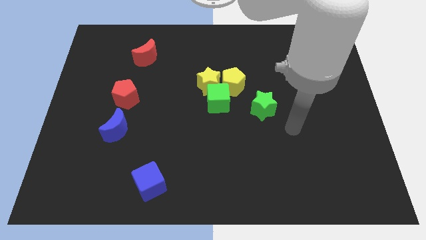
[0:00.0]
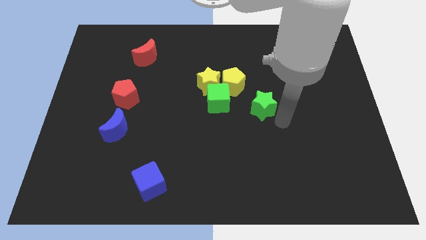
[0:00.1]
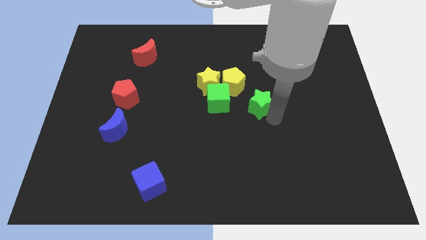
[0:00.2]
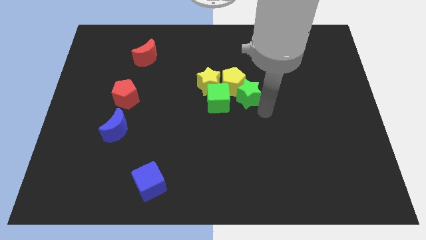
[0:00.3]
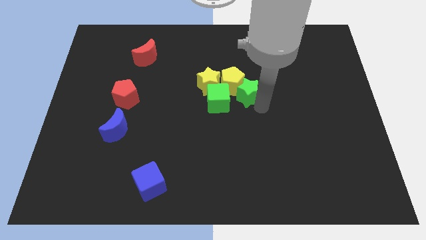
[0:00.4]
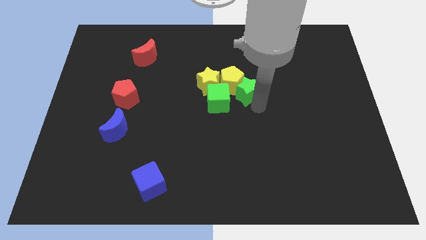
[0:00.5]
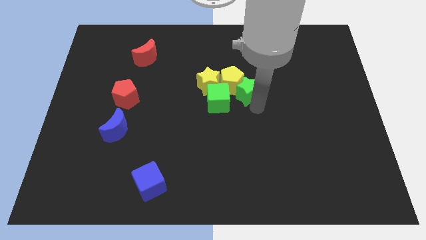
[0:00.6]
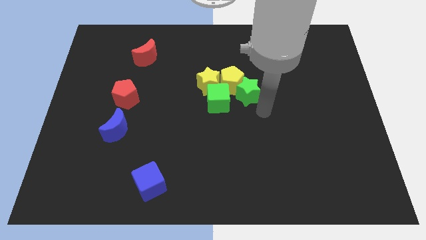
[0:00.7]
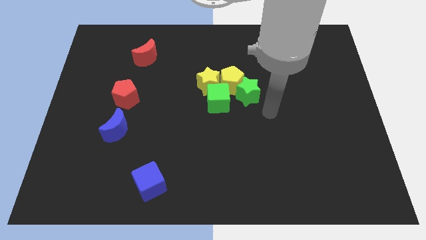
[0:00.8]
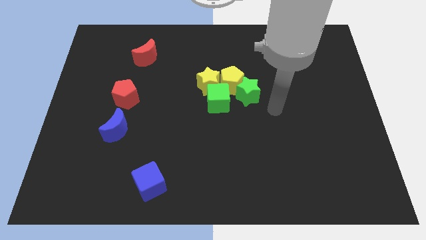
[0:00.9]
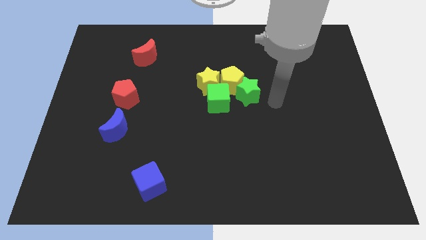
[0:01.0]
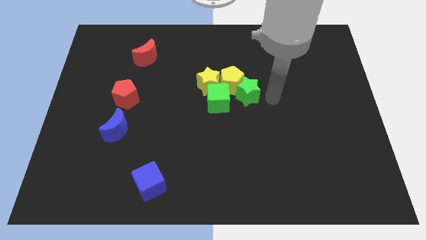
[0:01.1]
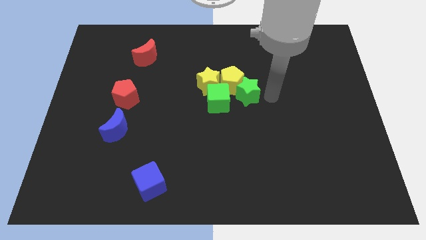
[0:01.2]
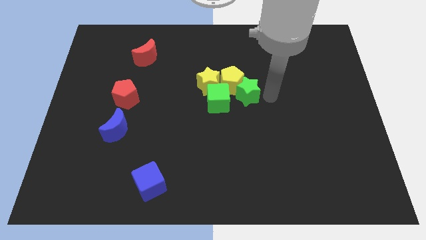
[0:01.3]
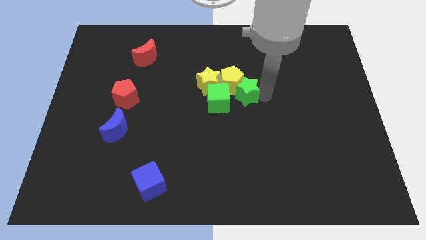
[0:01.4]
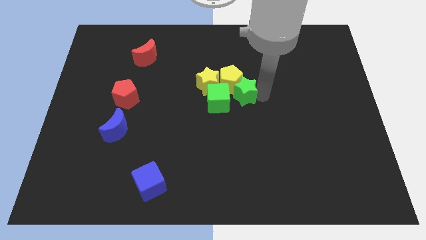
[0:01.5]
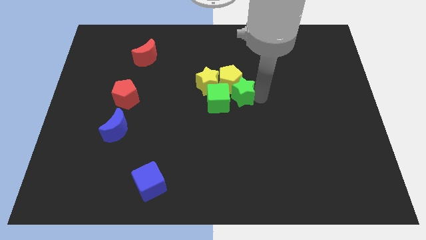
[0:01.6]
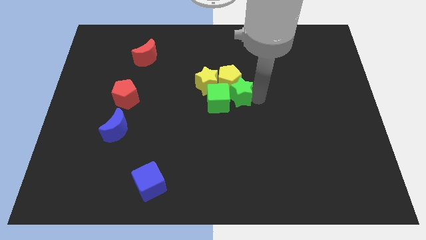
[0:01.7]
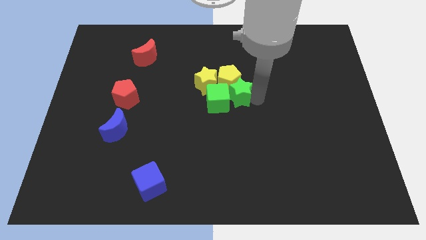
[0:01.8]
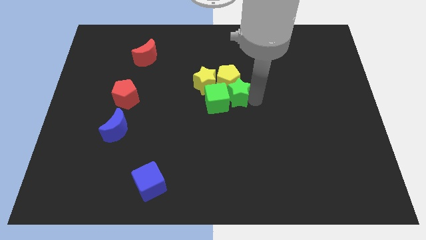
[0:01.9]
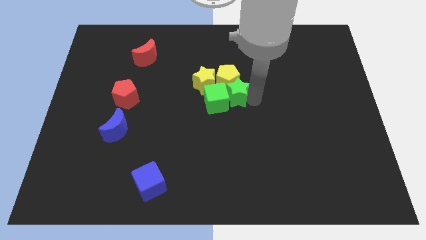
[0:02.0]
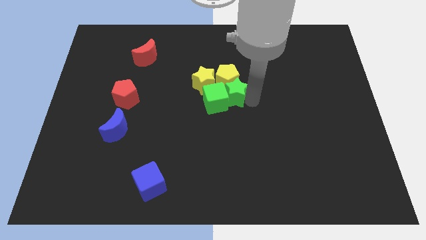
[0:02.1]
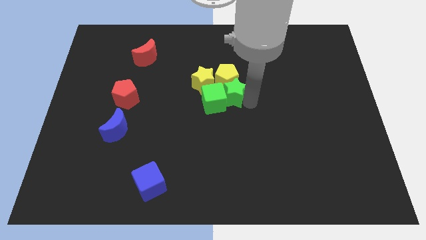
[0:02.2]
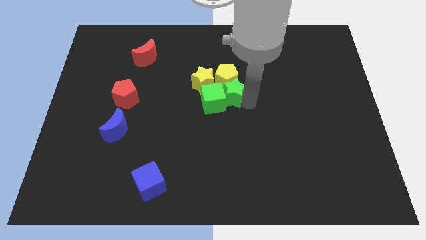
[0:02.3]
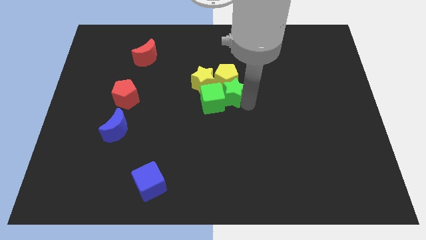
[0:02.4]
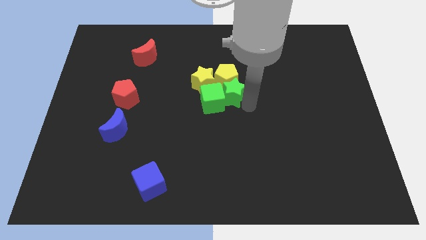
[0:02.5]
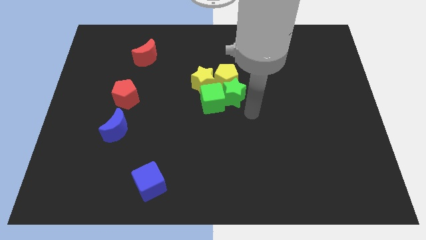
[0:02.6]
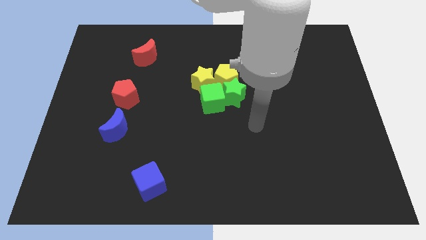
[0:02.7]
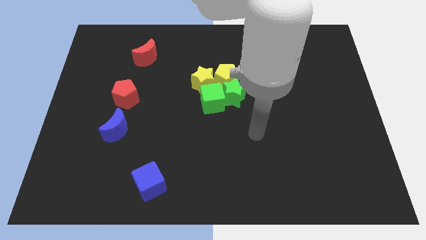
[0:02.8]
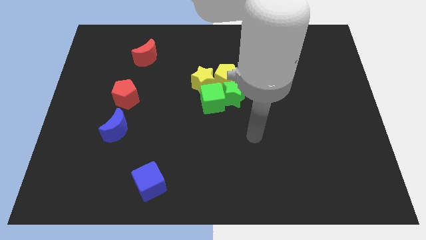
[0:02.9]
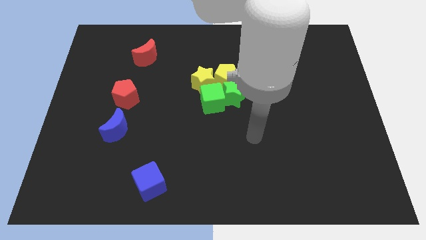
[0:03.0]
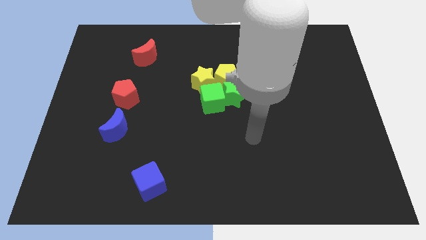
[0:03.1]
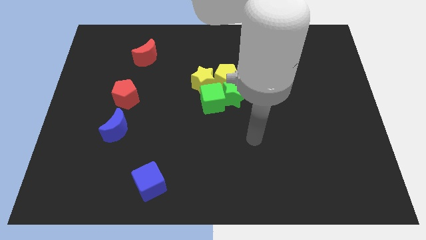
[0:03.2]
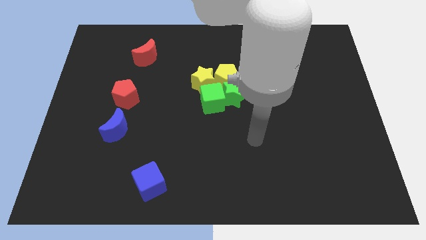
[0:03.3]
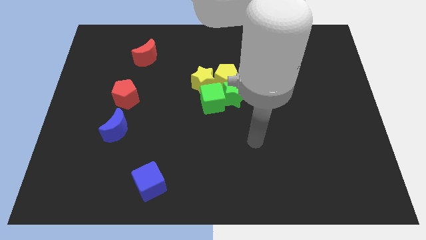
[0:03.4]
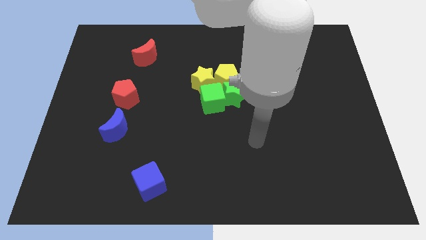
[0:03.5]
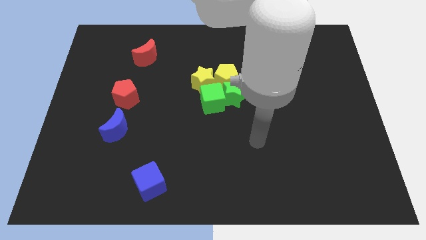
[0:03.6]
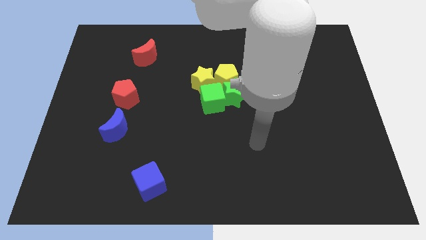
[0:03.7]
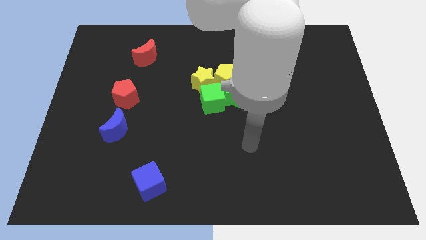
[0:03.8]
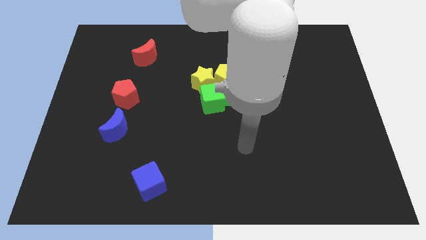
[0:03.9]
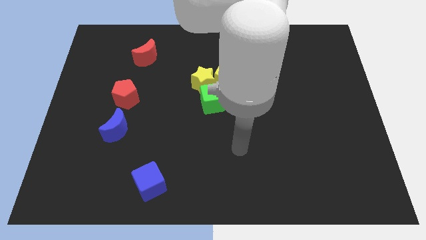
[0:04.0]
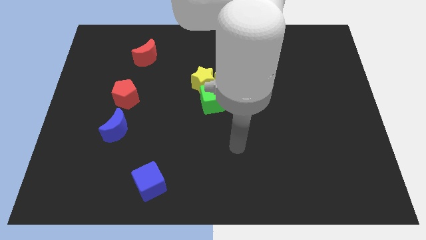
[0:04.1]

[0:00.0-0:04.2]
push the green star into the group of blocks

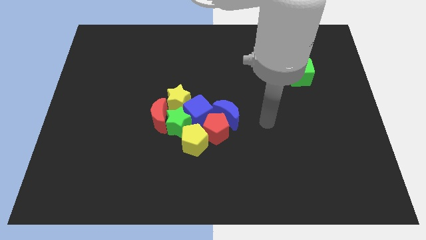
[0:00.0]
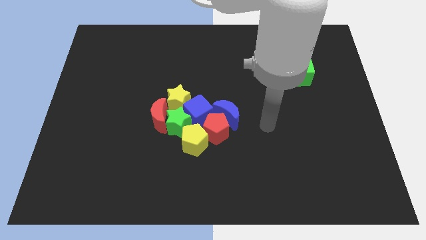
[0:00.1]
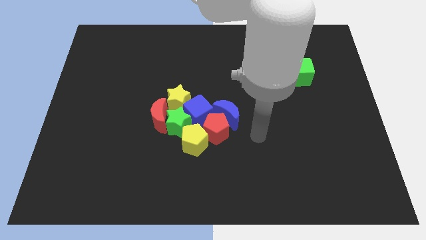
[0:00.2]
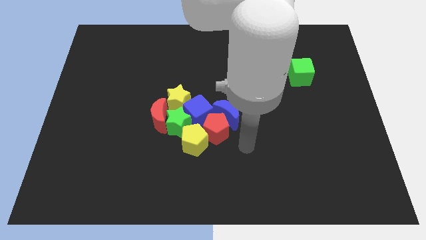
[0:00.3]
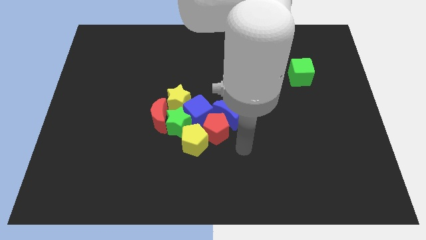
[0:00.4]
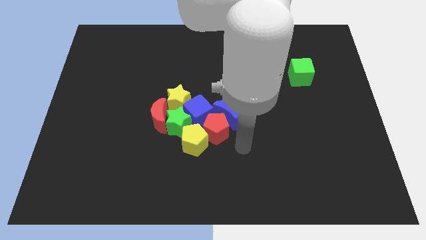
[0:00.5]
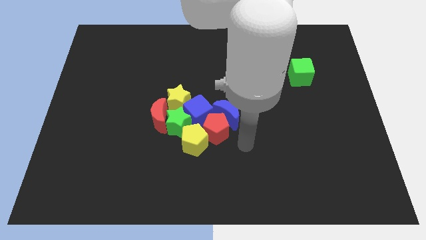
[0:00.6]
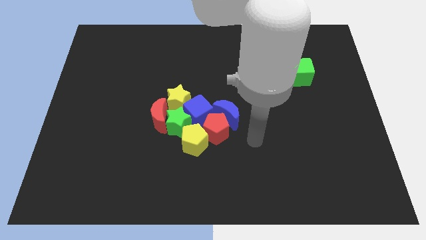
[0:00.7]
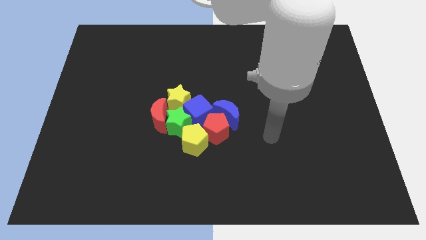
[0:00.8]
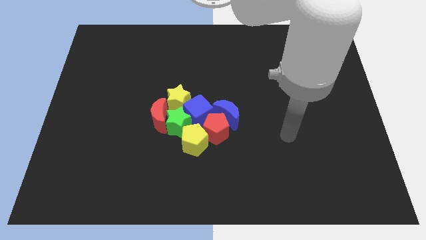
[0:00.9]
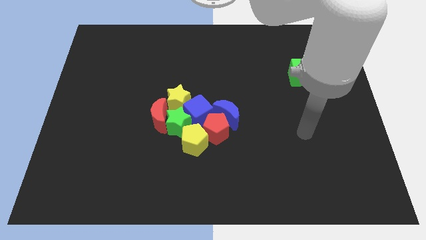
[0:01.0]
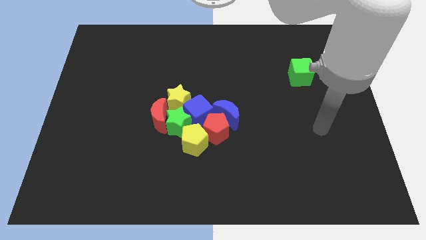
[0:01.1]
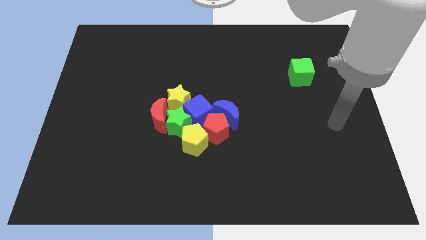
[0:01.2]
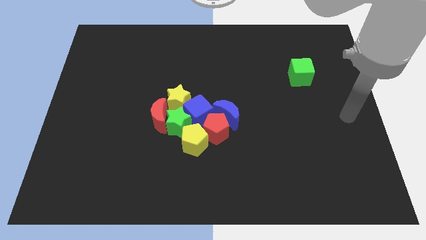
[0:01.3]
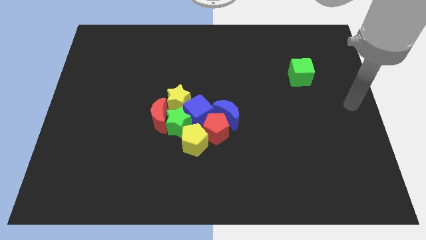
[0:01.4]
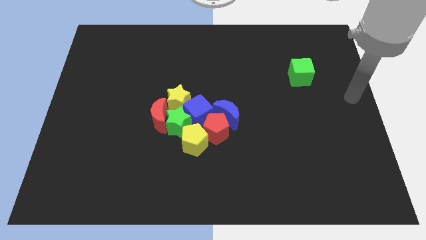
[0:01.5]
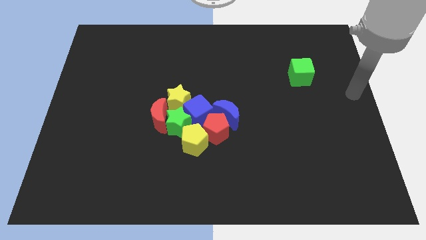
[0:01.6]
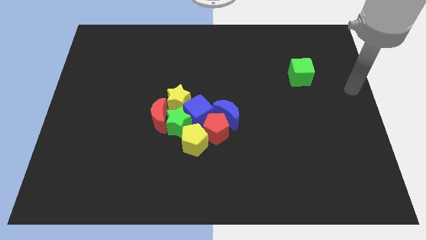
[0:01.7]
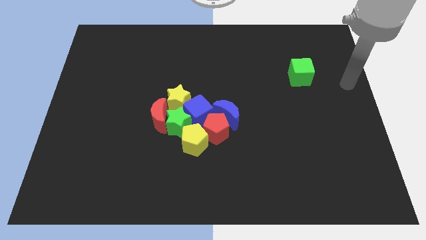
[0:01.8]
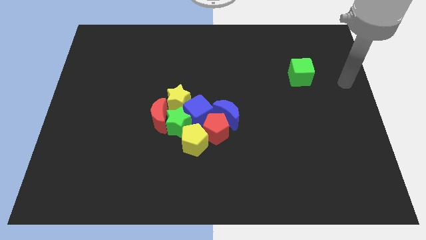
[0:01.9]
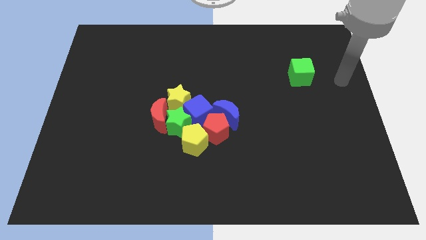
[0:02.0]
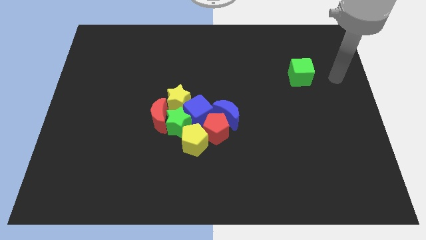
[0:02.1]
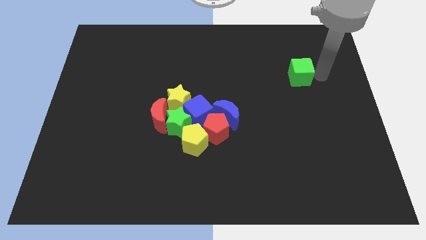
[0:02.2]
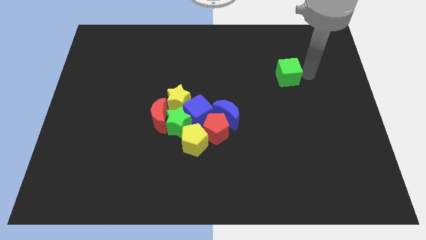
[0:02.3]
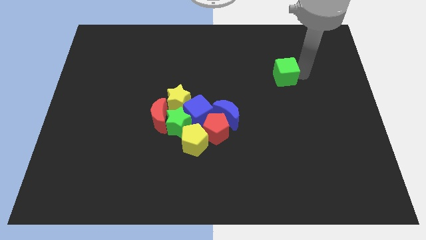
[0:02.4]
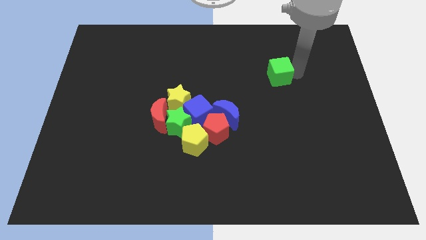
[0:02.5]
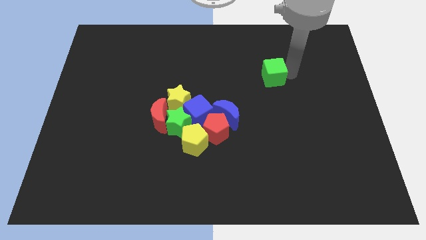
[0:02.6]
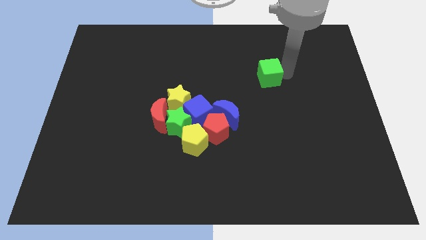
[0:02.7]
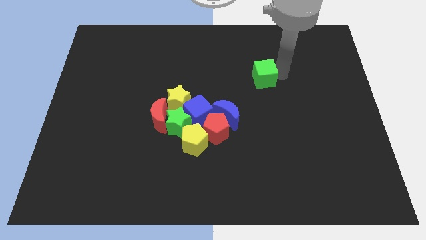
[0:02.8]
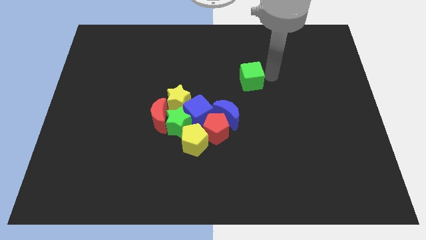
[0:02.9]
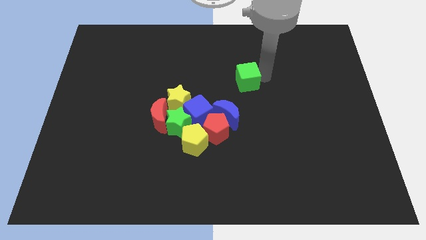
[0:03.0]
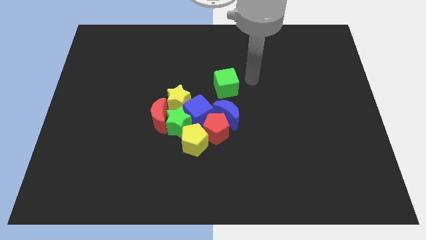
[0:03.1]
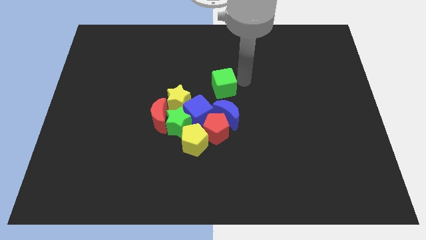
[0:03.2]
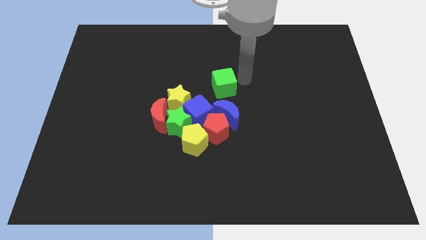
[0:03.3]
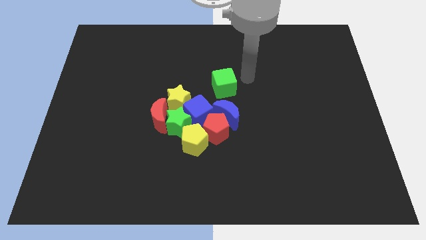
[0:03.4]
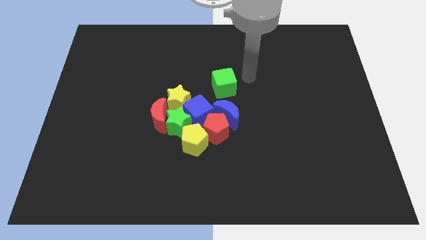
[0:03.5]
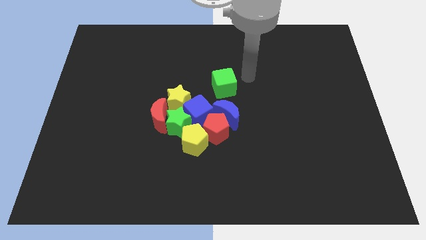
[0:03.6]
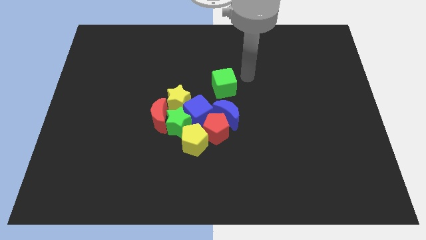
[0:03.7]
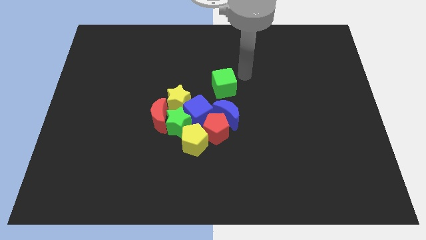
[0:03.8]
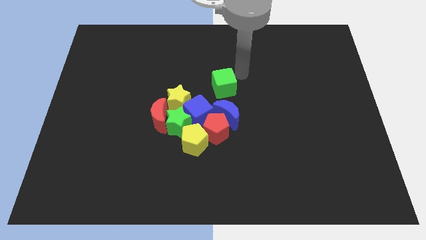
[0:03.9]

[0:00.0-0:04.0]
move the green cube to the center of the board

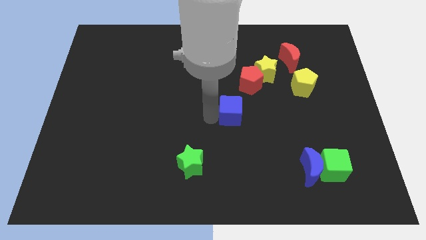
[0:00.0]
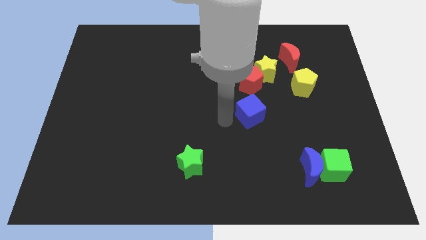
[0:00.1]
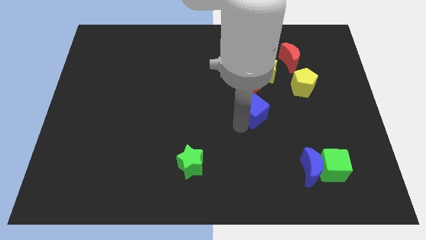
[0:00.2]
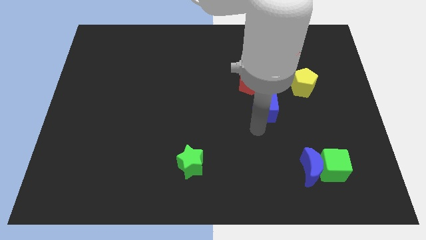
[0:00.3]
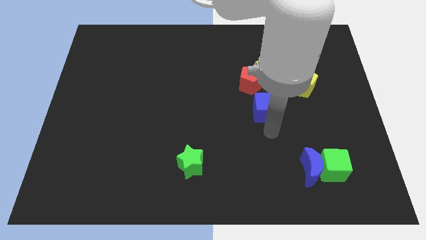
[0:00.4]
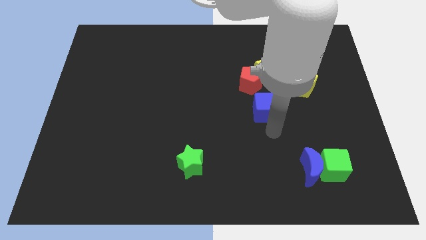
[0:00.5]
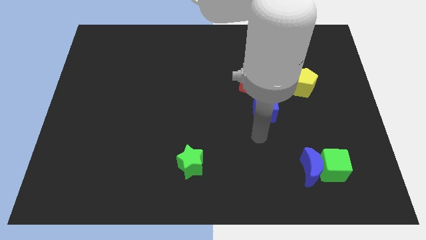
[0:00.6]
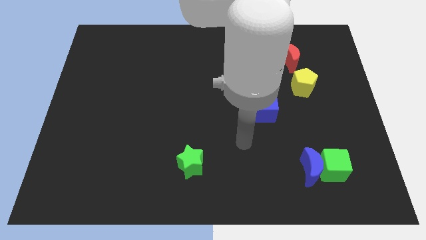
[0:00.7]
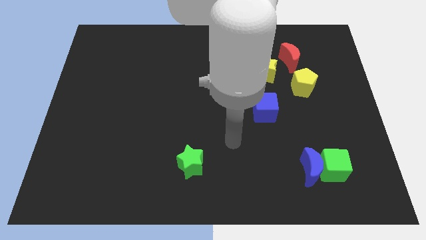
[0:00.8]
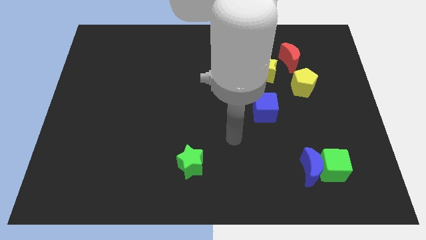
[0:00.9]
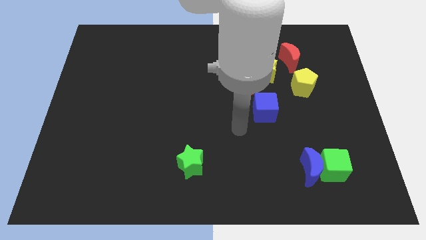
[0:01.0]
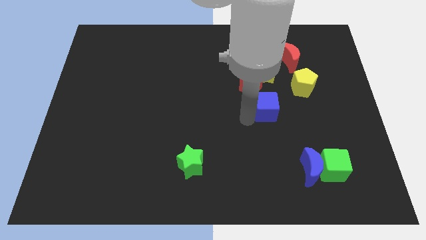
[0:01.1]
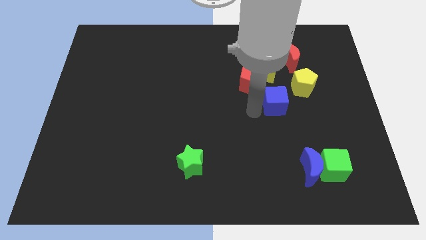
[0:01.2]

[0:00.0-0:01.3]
place the blue cube below the yellow star
